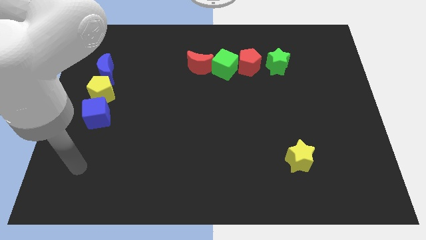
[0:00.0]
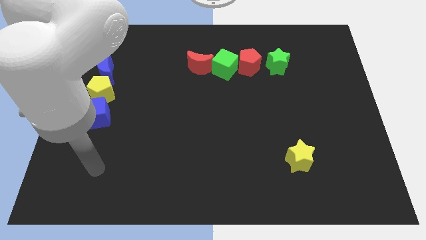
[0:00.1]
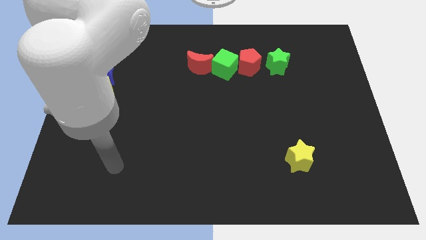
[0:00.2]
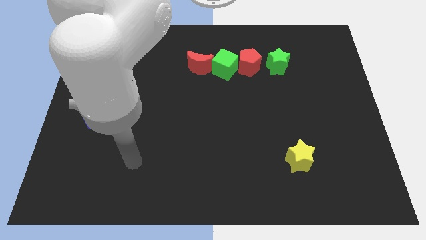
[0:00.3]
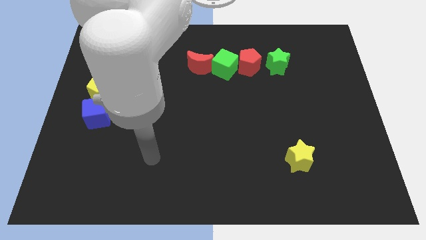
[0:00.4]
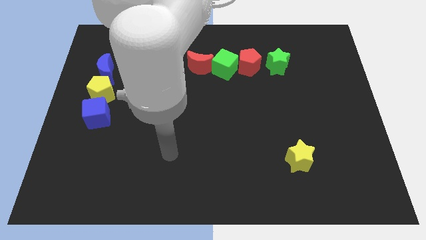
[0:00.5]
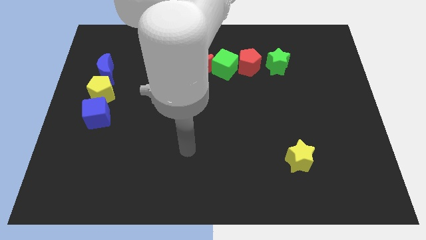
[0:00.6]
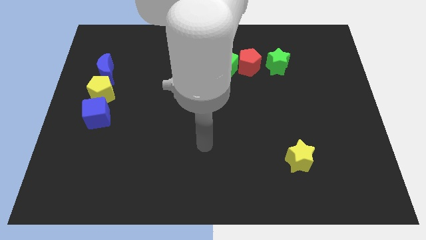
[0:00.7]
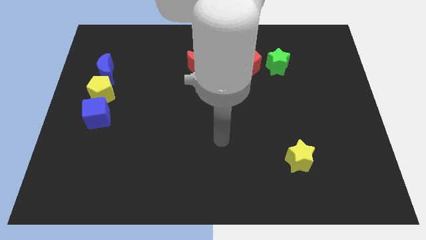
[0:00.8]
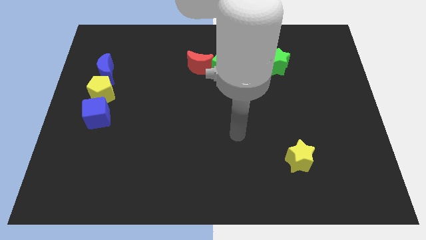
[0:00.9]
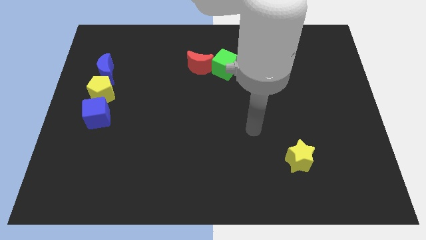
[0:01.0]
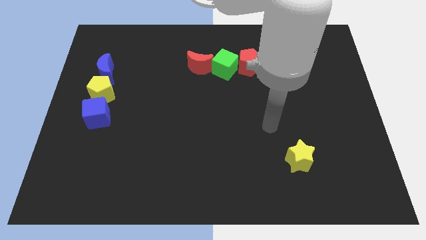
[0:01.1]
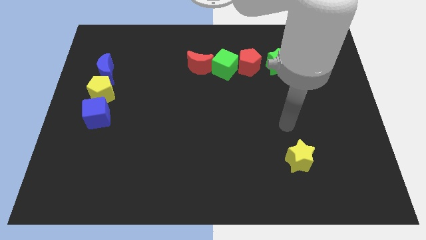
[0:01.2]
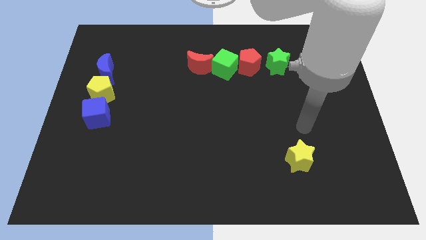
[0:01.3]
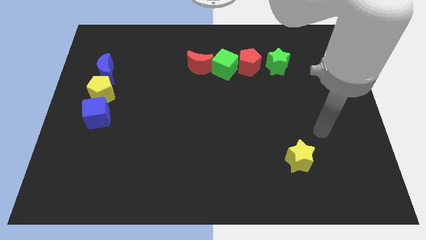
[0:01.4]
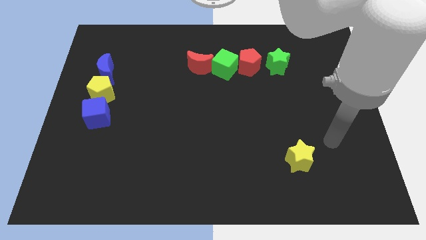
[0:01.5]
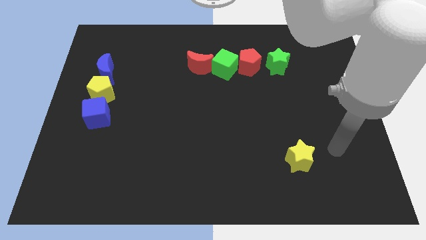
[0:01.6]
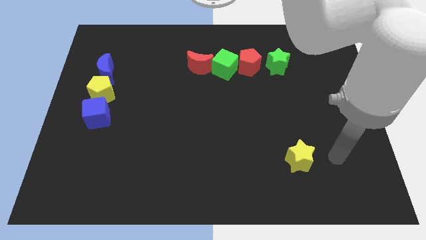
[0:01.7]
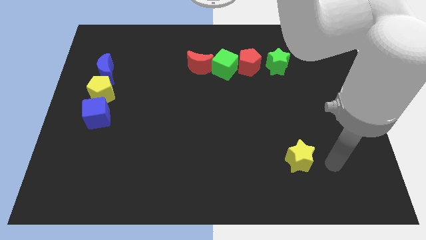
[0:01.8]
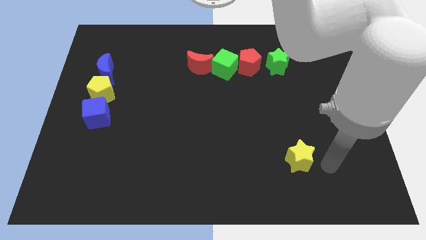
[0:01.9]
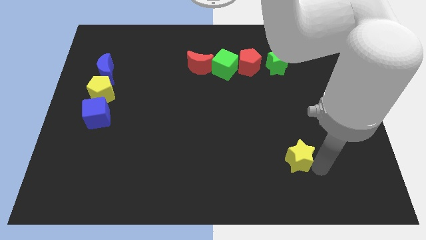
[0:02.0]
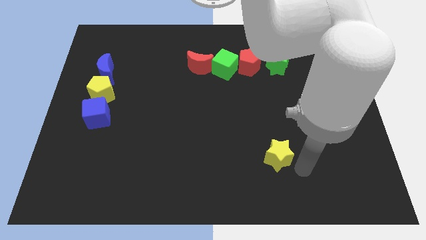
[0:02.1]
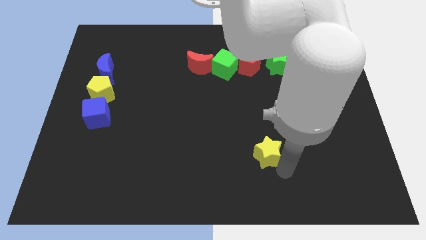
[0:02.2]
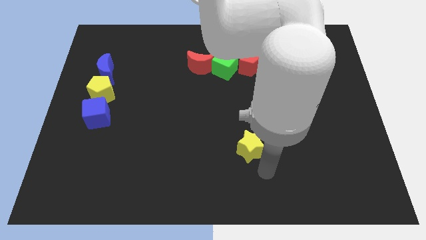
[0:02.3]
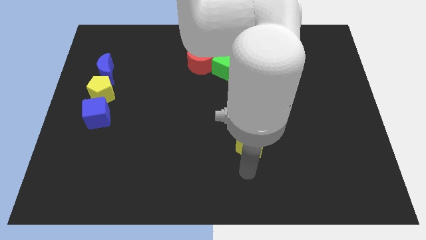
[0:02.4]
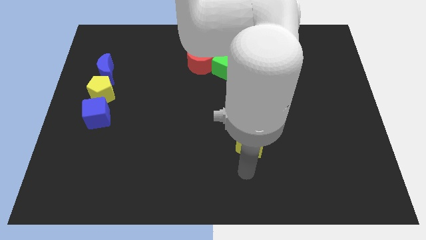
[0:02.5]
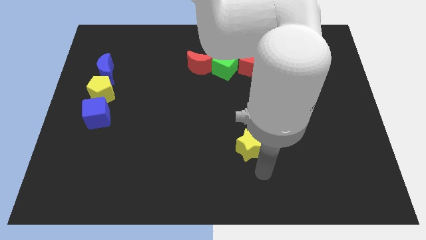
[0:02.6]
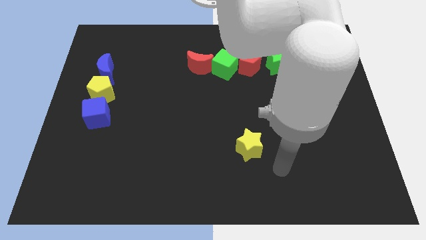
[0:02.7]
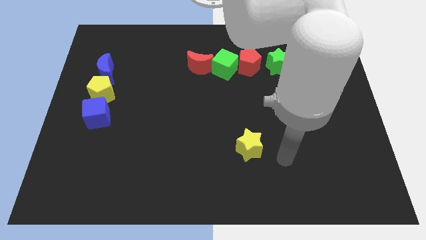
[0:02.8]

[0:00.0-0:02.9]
move the yellow star diagonally up

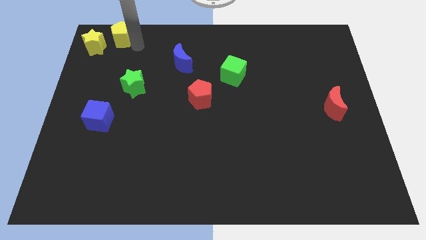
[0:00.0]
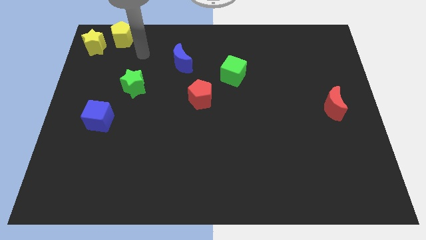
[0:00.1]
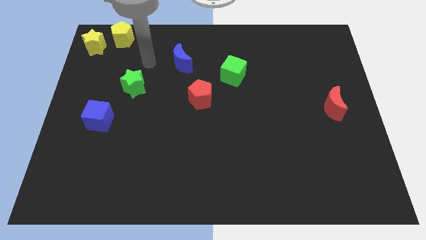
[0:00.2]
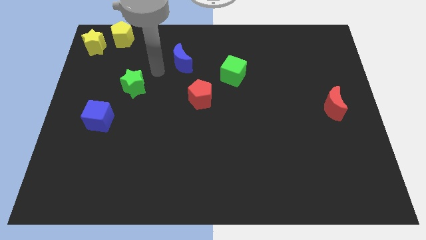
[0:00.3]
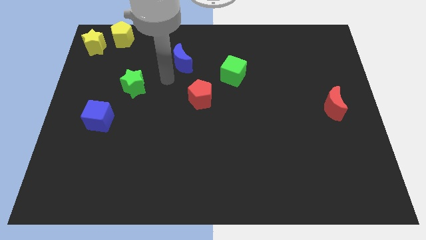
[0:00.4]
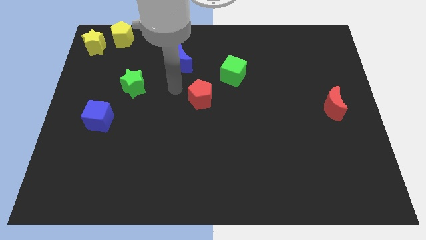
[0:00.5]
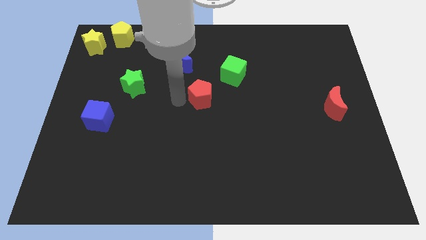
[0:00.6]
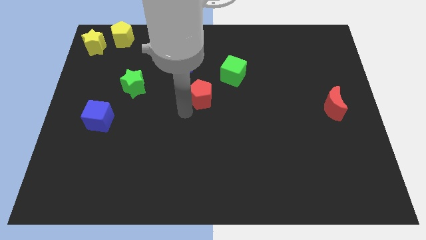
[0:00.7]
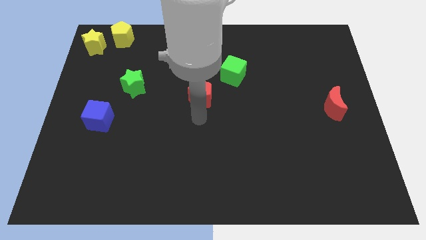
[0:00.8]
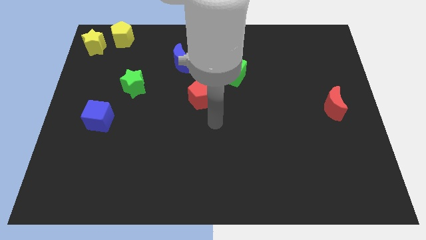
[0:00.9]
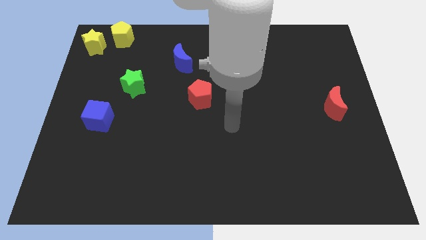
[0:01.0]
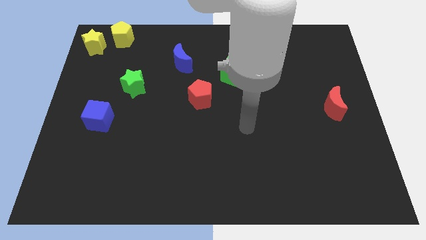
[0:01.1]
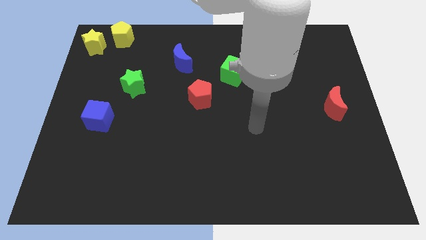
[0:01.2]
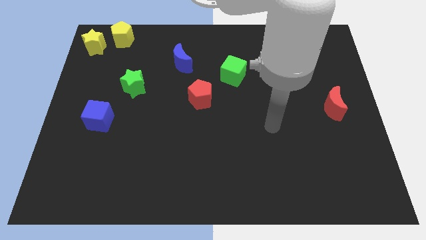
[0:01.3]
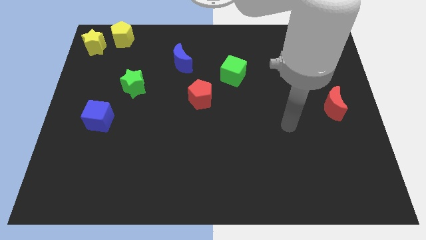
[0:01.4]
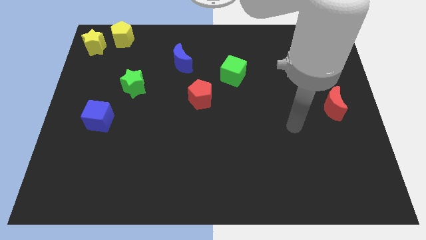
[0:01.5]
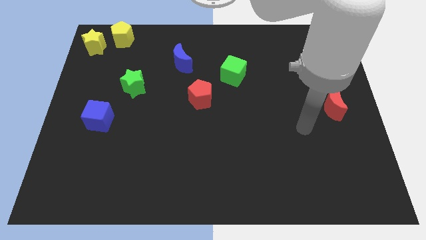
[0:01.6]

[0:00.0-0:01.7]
move your arm away from the yellow pentagon

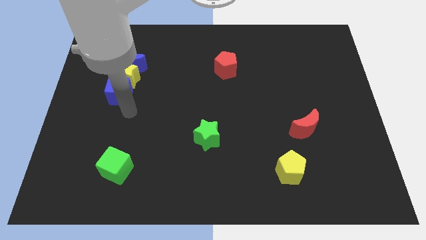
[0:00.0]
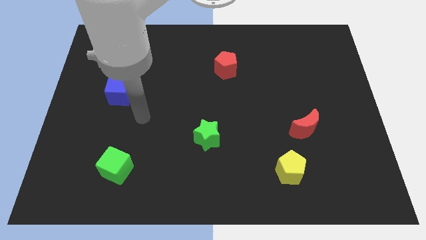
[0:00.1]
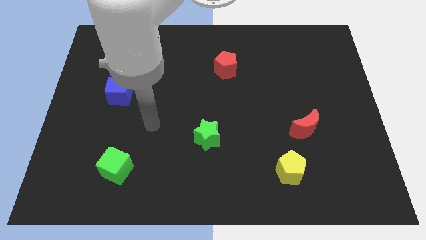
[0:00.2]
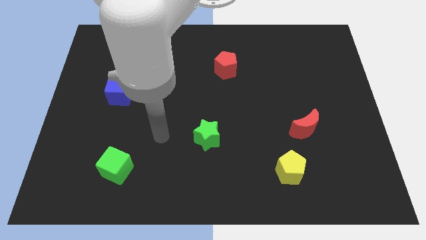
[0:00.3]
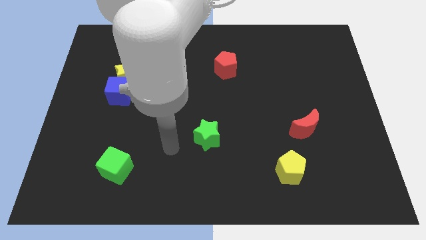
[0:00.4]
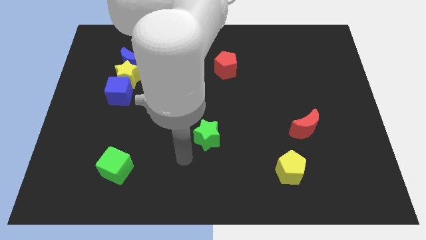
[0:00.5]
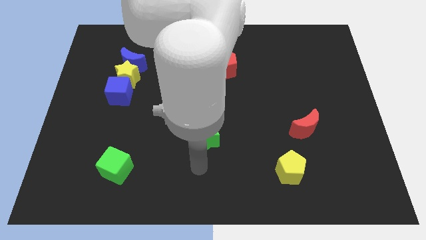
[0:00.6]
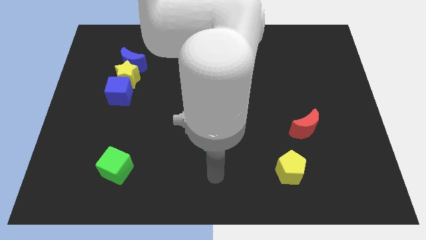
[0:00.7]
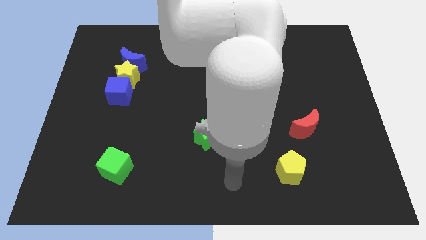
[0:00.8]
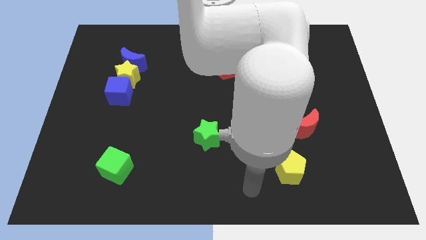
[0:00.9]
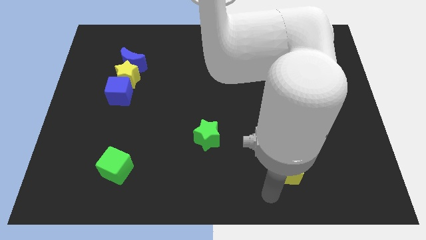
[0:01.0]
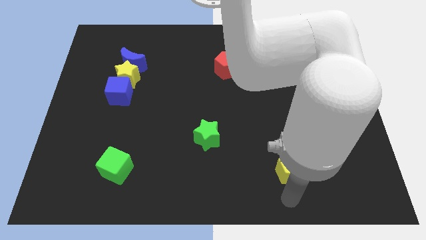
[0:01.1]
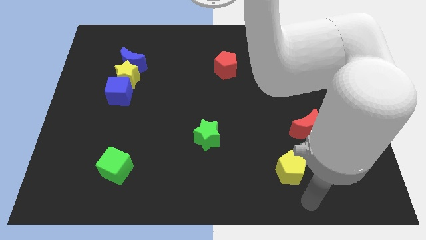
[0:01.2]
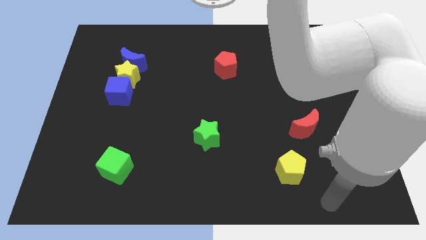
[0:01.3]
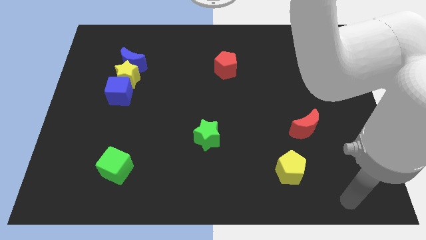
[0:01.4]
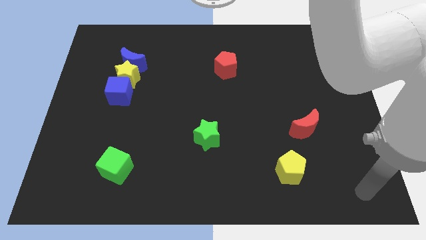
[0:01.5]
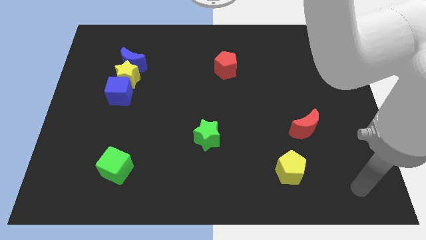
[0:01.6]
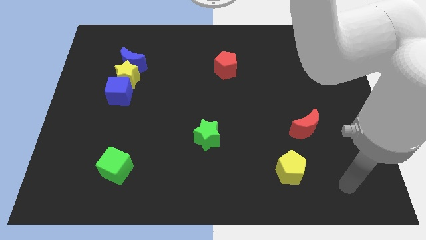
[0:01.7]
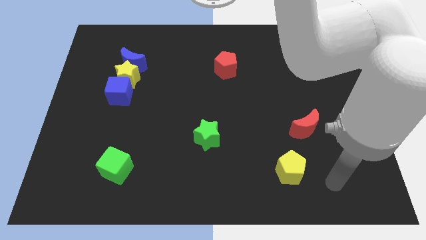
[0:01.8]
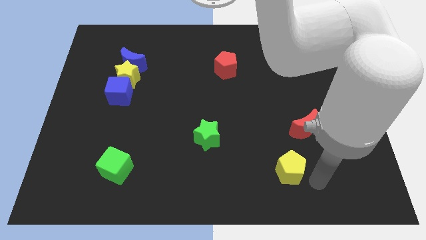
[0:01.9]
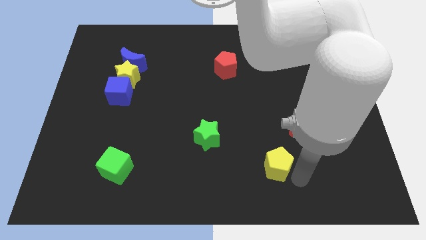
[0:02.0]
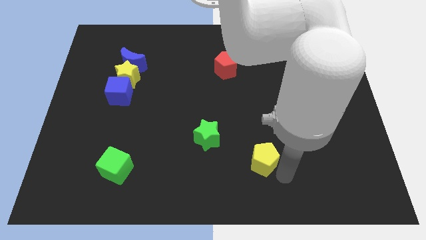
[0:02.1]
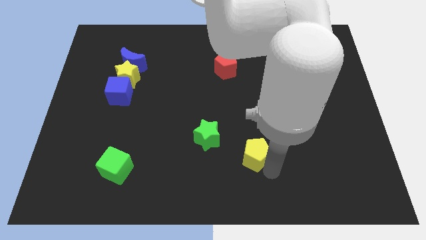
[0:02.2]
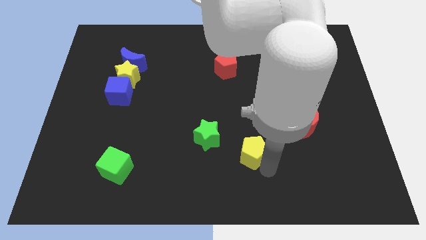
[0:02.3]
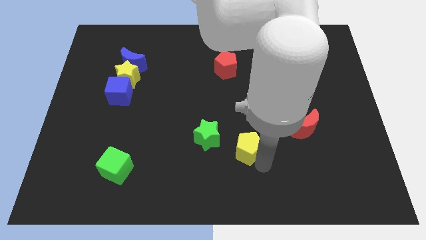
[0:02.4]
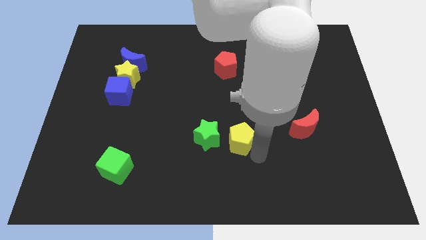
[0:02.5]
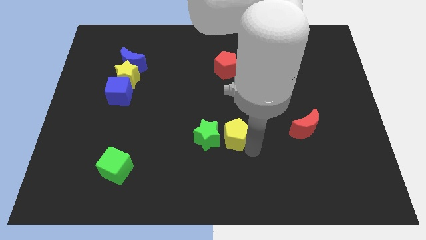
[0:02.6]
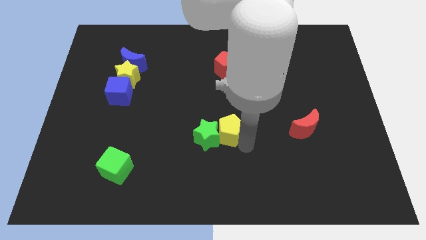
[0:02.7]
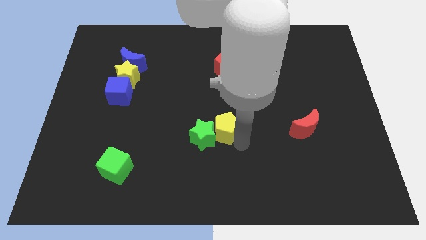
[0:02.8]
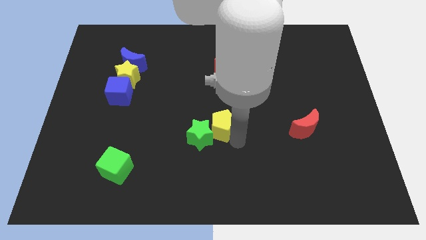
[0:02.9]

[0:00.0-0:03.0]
move the yellow pentagon to the top of the green star

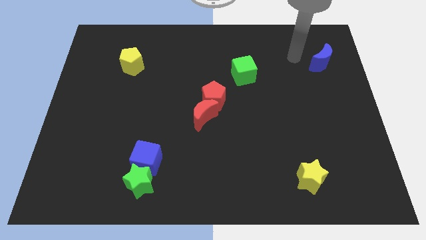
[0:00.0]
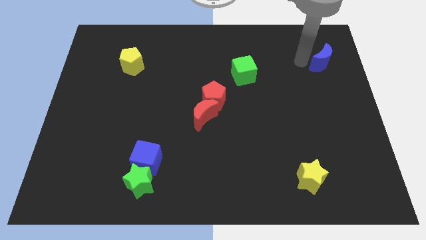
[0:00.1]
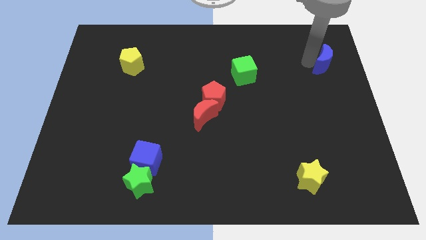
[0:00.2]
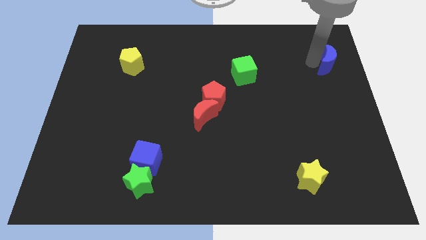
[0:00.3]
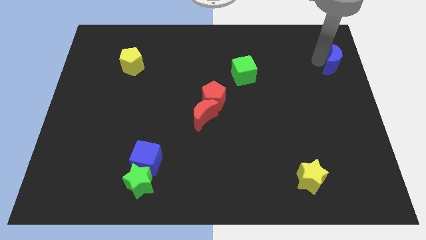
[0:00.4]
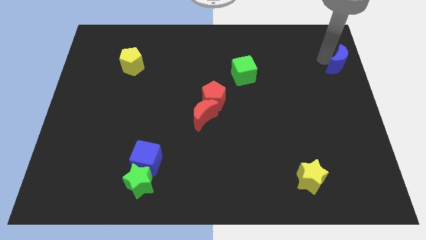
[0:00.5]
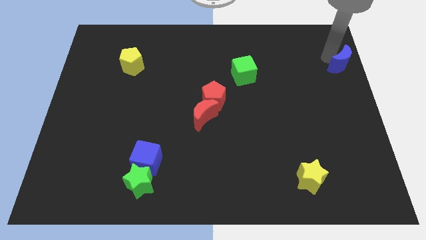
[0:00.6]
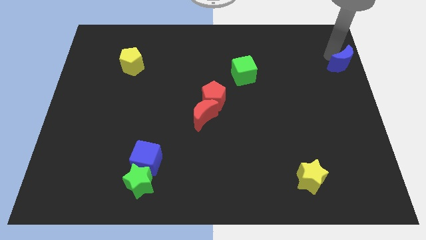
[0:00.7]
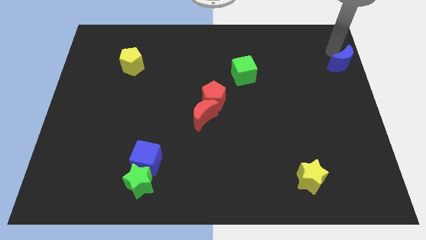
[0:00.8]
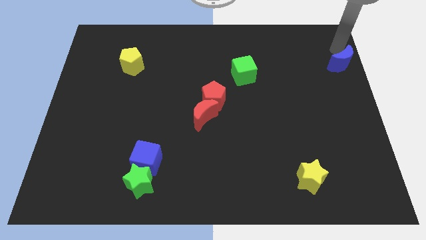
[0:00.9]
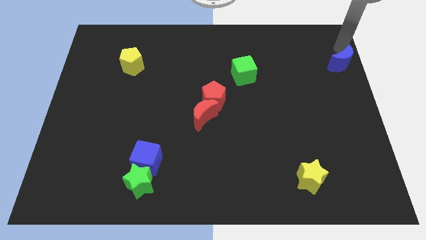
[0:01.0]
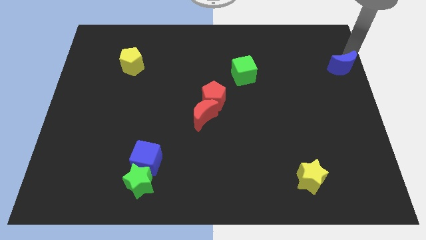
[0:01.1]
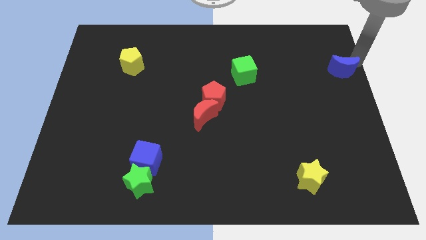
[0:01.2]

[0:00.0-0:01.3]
push the blue crescent slightly to the right
